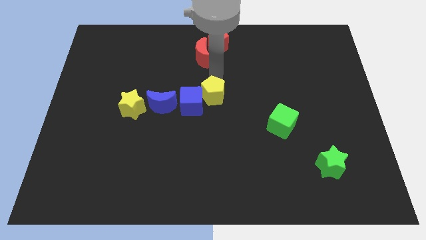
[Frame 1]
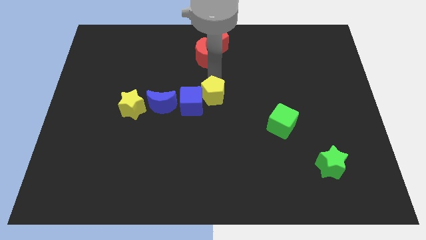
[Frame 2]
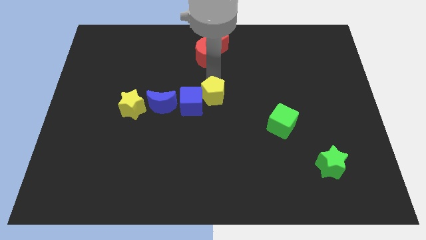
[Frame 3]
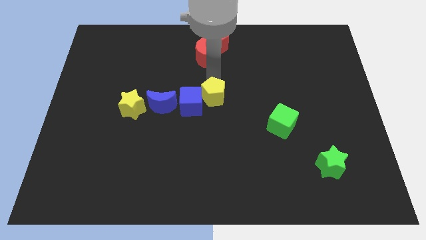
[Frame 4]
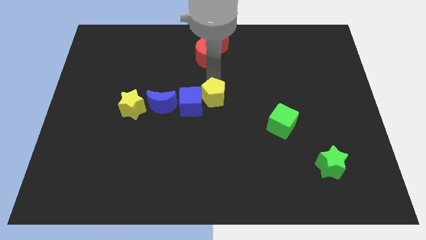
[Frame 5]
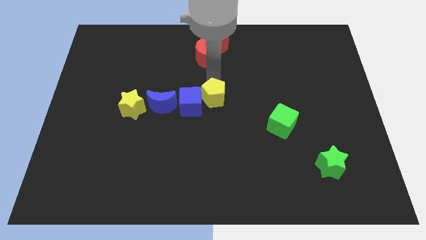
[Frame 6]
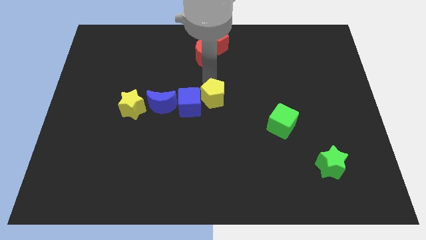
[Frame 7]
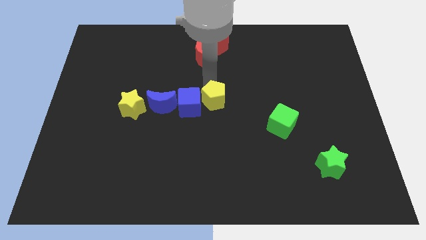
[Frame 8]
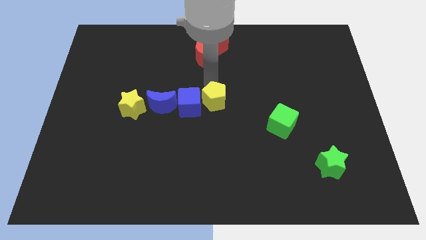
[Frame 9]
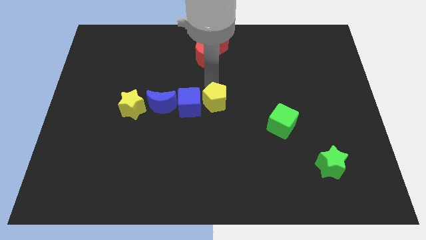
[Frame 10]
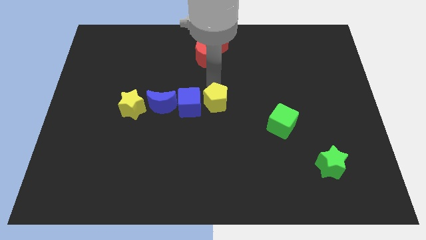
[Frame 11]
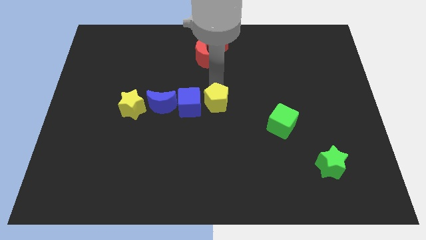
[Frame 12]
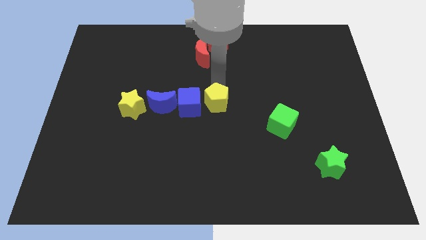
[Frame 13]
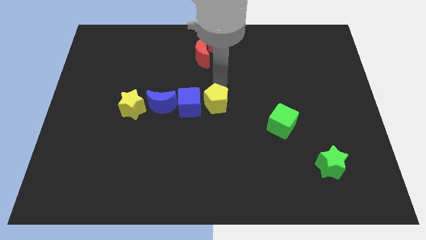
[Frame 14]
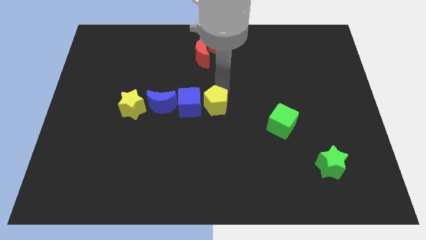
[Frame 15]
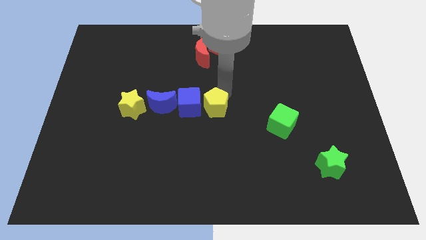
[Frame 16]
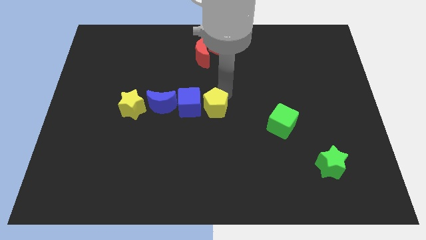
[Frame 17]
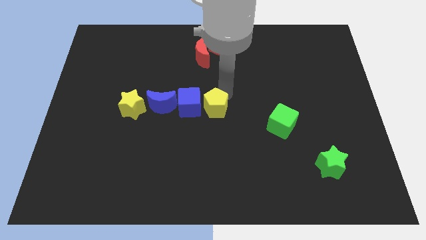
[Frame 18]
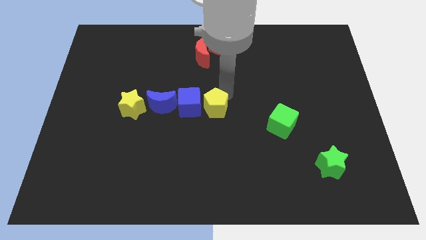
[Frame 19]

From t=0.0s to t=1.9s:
move yellow star slightly to the right of blue cube

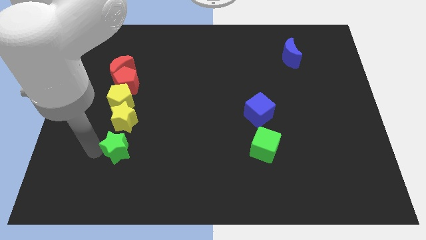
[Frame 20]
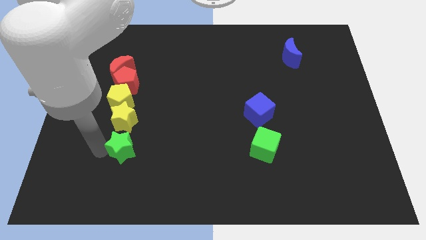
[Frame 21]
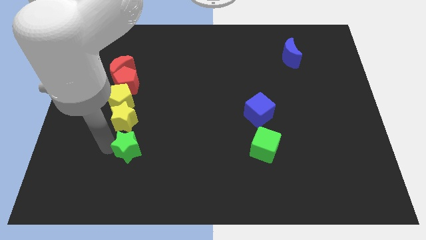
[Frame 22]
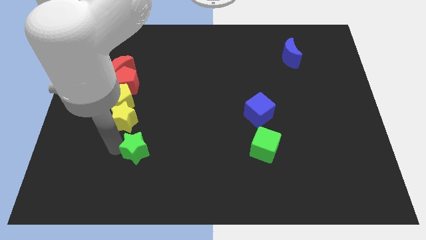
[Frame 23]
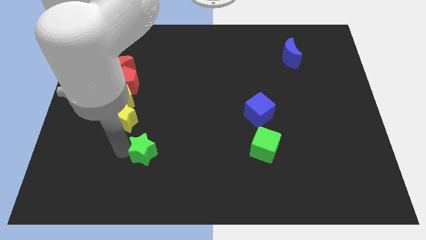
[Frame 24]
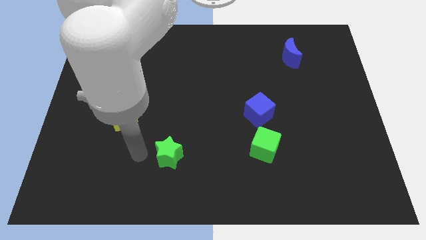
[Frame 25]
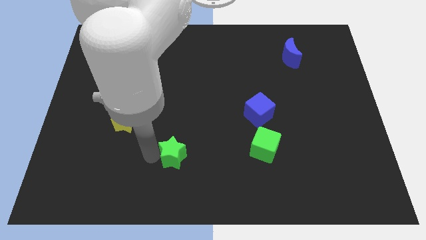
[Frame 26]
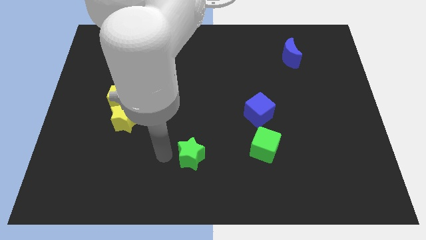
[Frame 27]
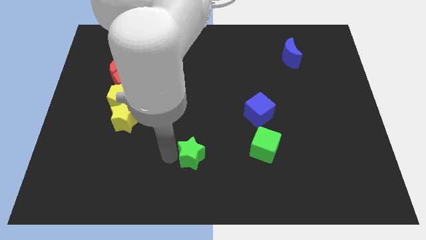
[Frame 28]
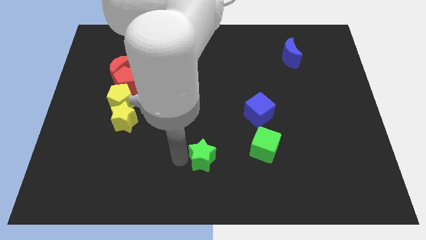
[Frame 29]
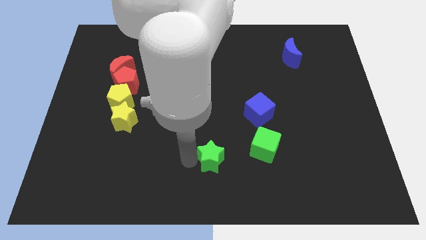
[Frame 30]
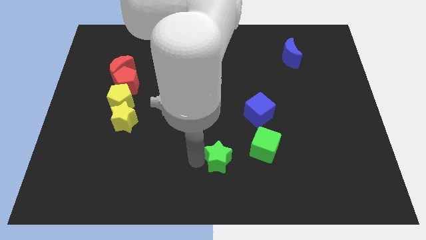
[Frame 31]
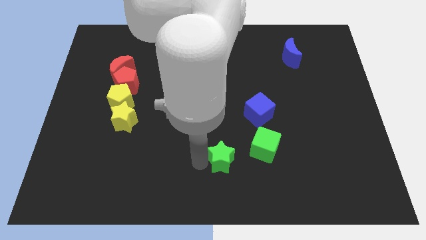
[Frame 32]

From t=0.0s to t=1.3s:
place green star beside green cube

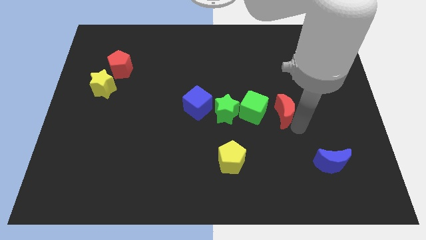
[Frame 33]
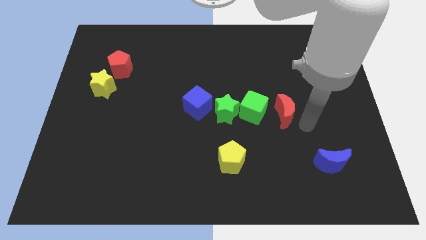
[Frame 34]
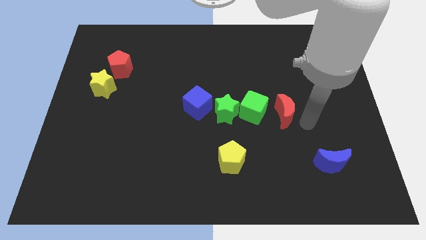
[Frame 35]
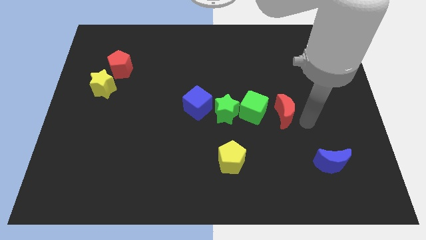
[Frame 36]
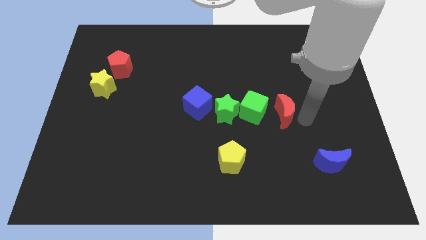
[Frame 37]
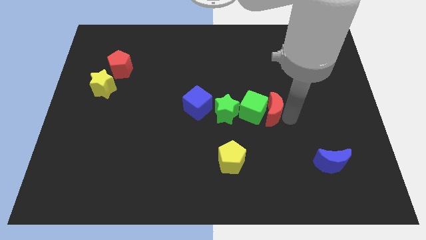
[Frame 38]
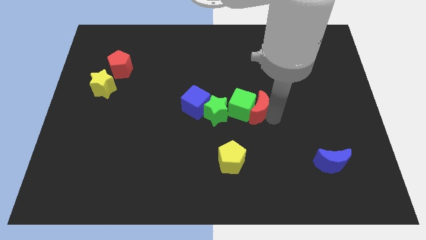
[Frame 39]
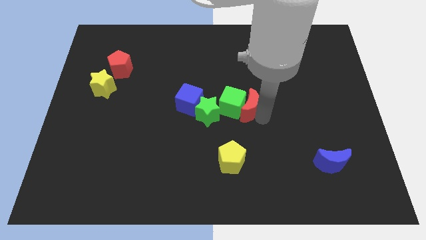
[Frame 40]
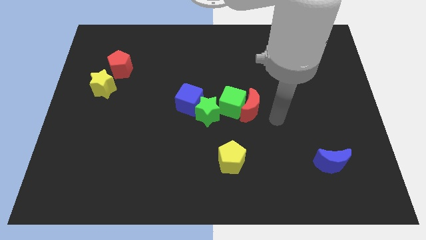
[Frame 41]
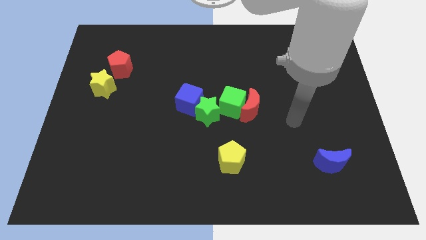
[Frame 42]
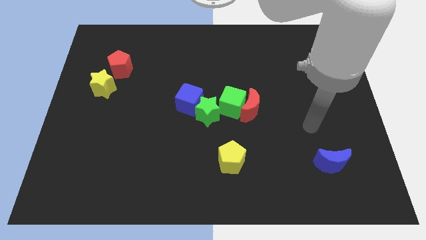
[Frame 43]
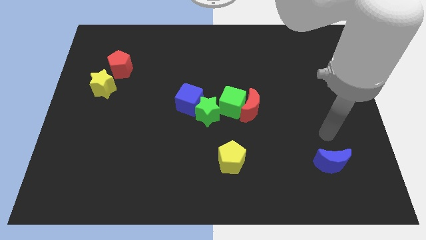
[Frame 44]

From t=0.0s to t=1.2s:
push the red crescent into the green cube

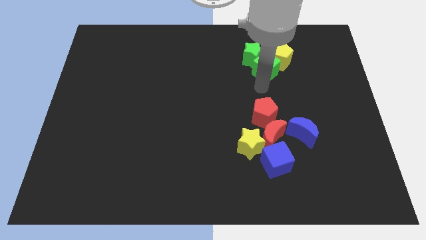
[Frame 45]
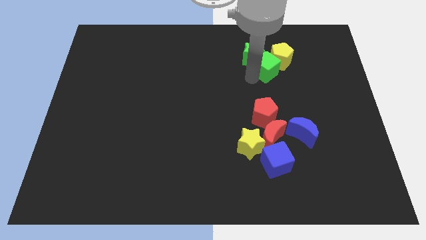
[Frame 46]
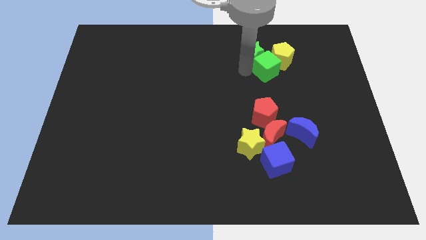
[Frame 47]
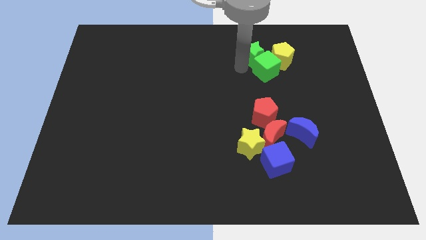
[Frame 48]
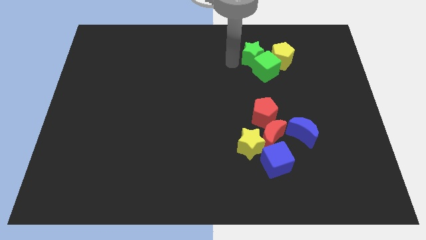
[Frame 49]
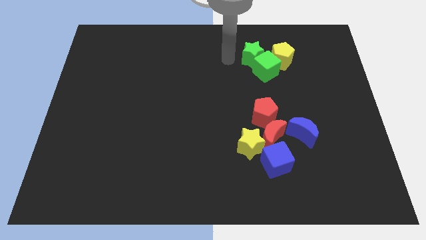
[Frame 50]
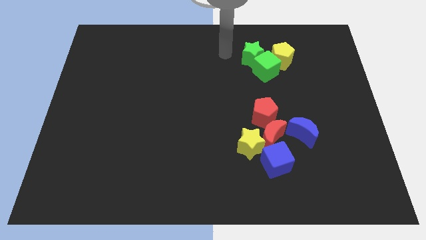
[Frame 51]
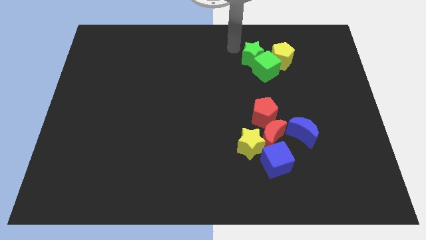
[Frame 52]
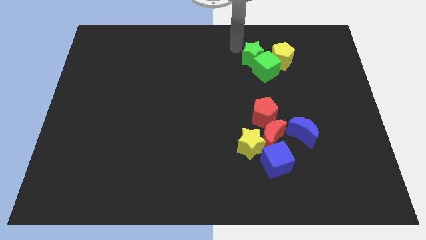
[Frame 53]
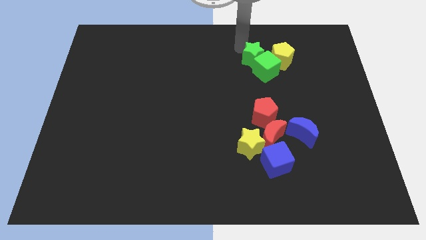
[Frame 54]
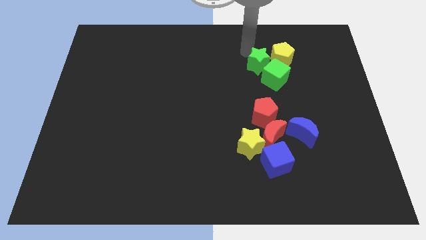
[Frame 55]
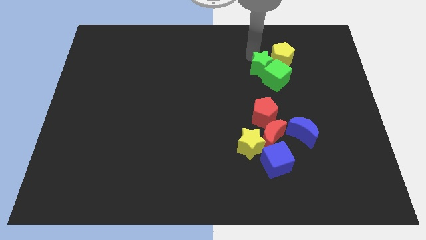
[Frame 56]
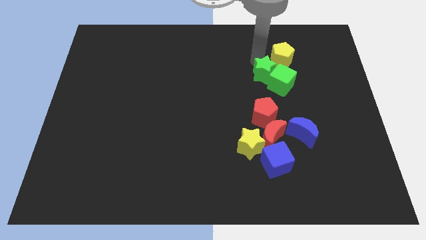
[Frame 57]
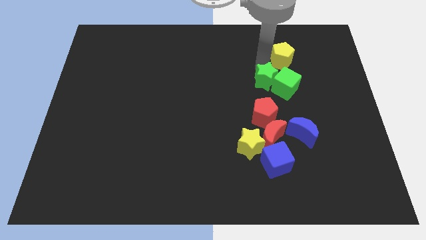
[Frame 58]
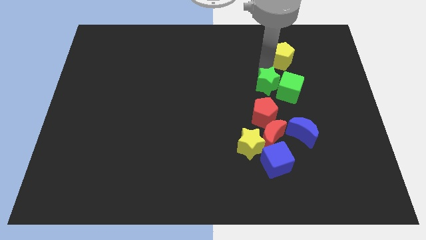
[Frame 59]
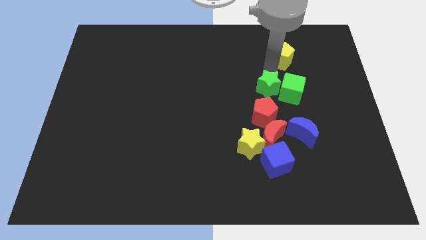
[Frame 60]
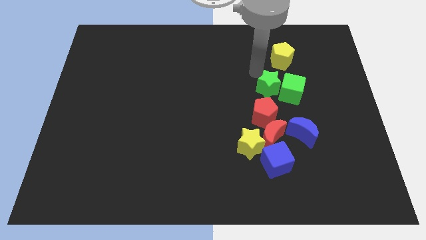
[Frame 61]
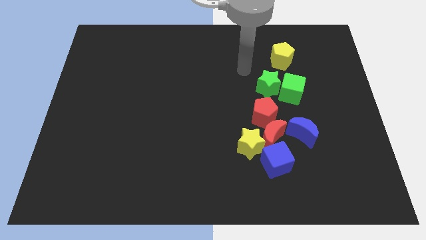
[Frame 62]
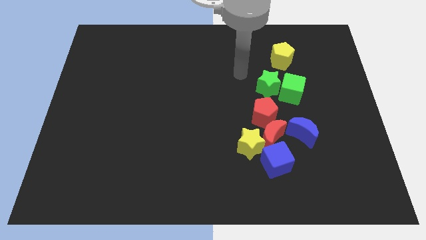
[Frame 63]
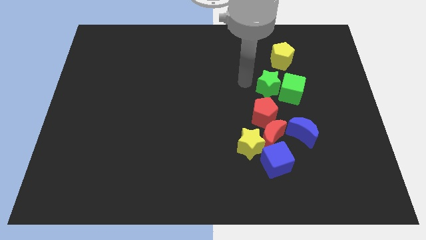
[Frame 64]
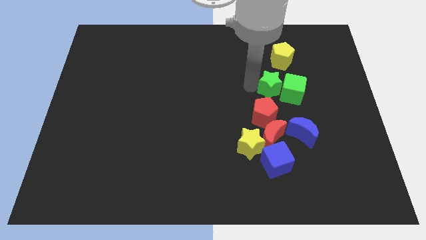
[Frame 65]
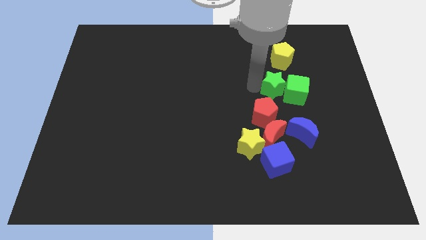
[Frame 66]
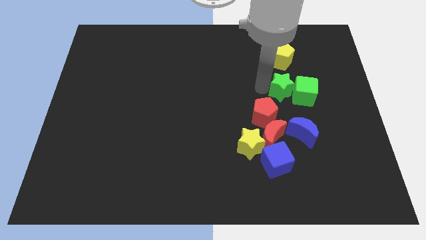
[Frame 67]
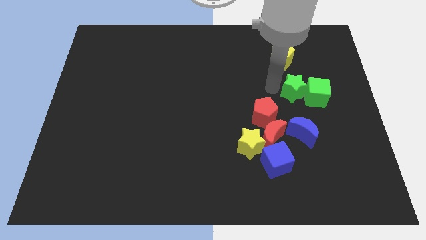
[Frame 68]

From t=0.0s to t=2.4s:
push the green blocks towards the right side of the board

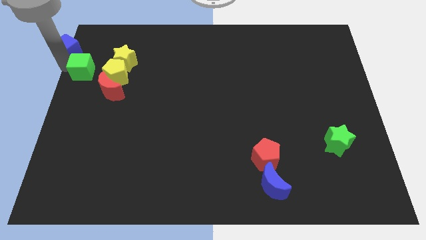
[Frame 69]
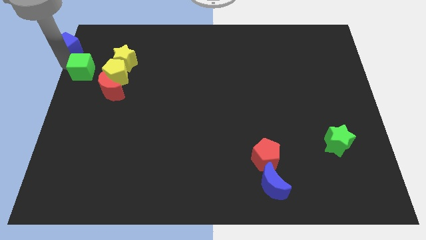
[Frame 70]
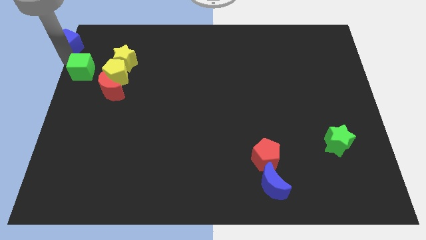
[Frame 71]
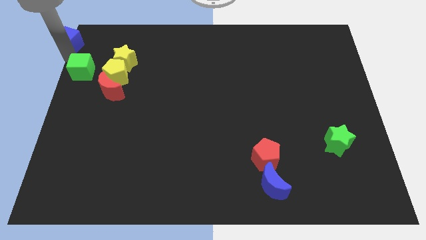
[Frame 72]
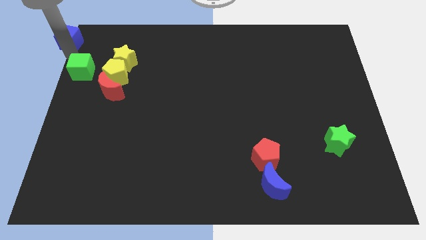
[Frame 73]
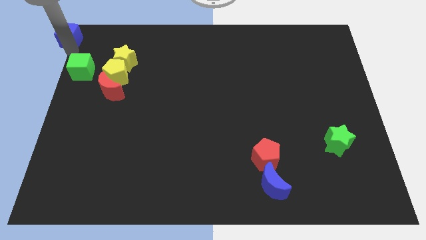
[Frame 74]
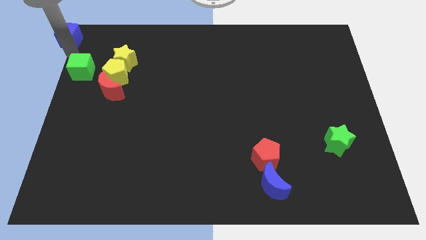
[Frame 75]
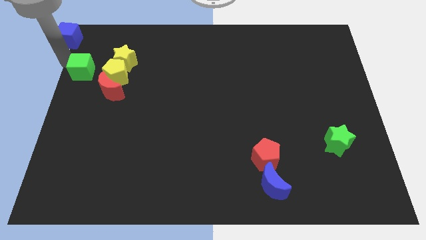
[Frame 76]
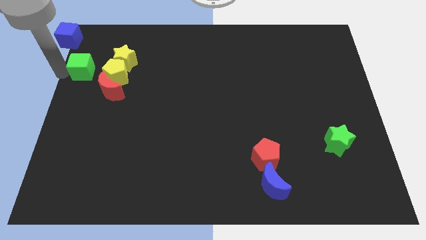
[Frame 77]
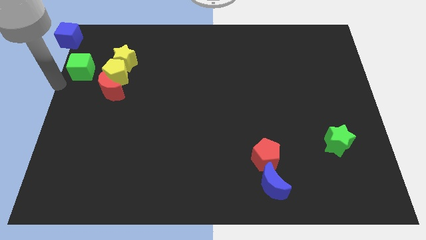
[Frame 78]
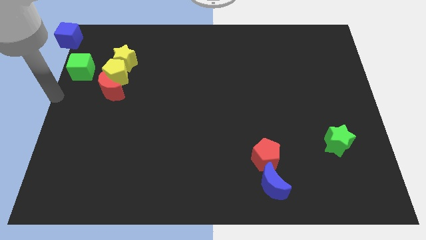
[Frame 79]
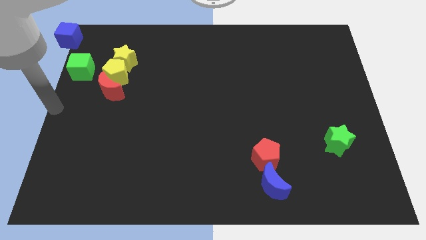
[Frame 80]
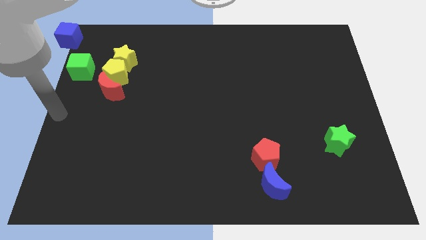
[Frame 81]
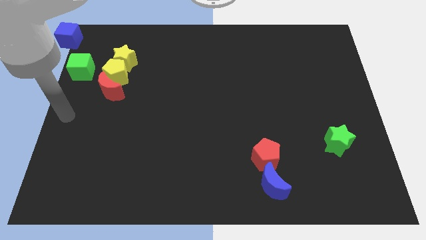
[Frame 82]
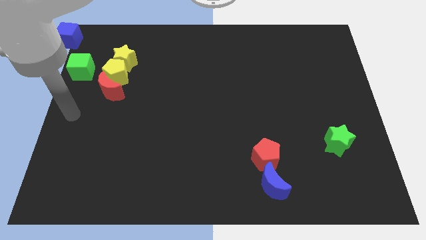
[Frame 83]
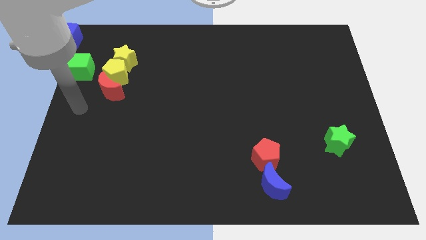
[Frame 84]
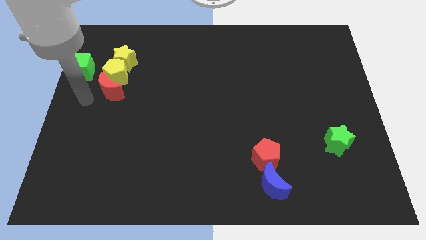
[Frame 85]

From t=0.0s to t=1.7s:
move the blue cube to the top left of the board

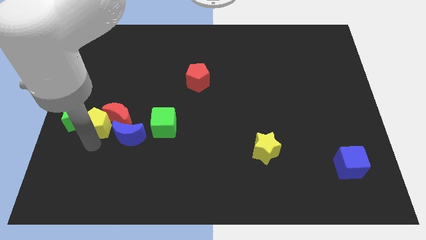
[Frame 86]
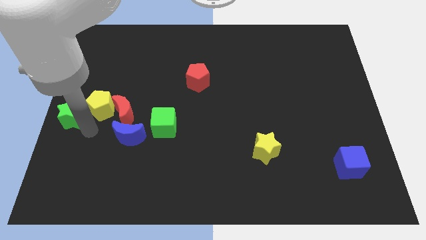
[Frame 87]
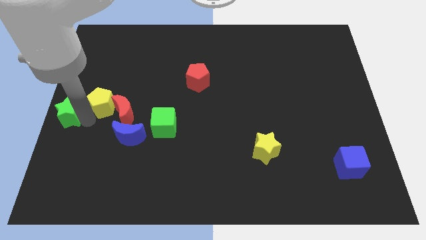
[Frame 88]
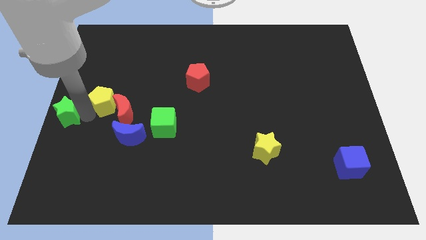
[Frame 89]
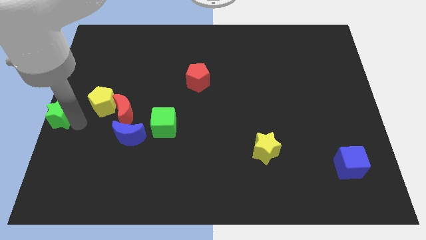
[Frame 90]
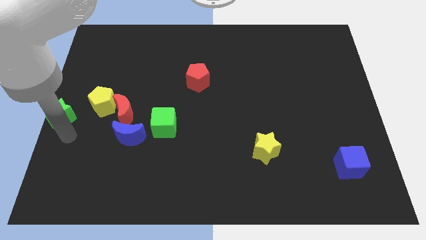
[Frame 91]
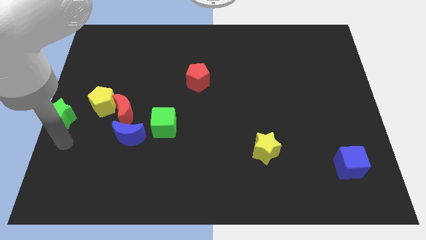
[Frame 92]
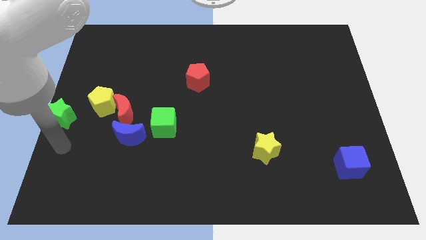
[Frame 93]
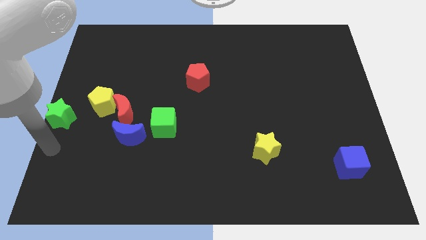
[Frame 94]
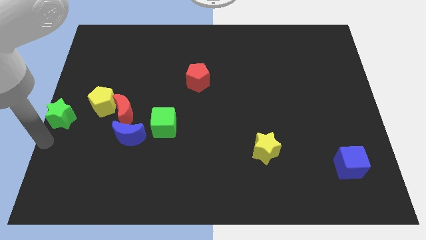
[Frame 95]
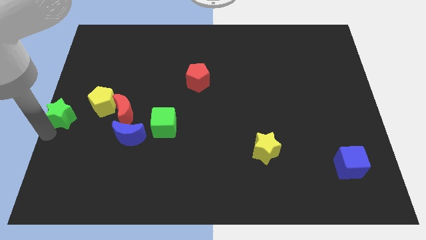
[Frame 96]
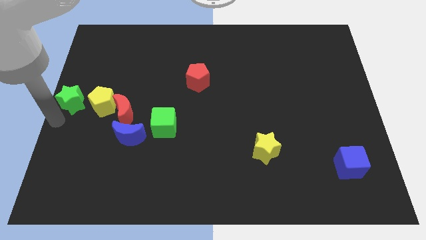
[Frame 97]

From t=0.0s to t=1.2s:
separate green star and yellow pentagon
